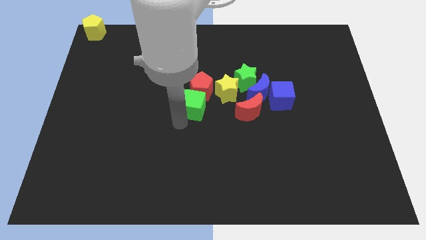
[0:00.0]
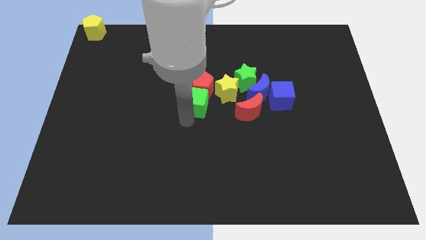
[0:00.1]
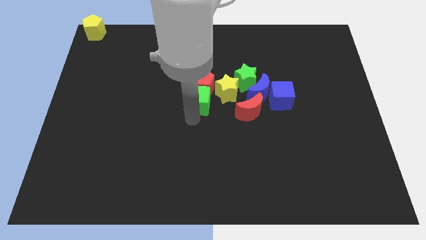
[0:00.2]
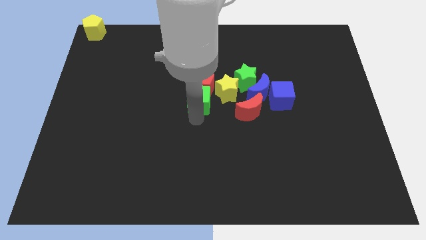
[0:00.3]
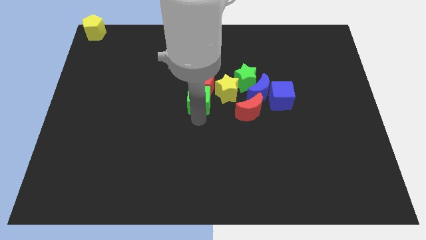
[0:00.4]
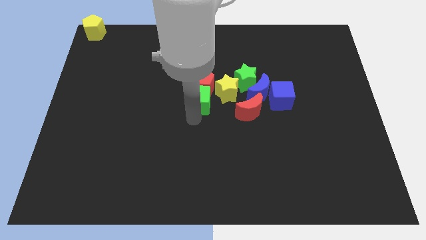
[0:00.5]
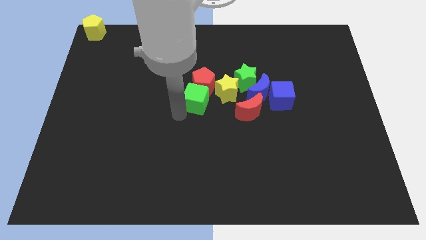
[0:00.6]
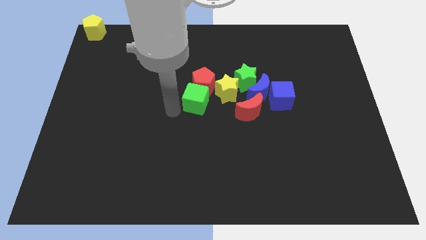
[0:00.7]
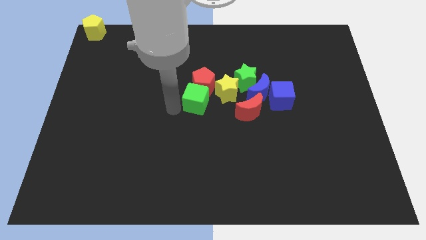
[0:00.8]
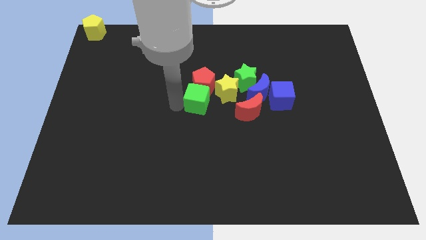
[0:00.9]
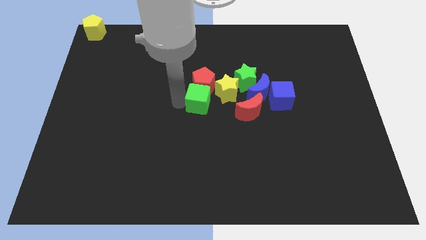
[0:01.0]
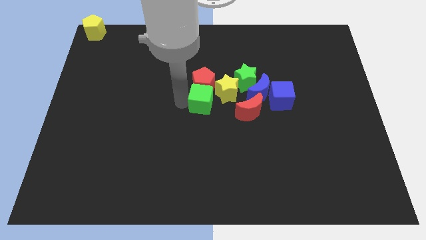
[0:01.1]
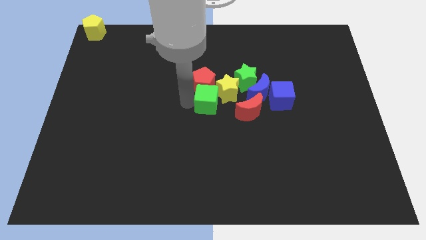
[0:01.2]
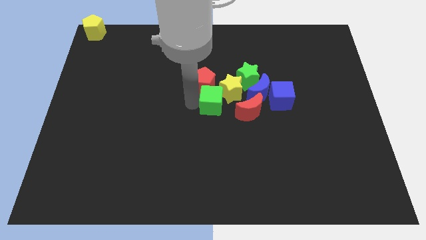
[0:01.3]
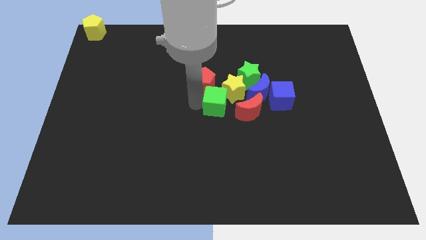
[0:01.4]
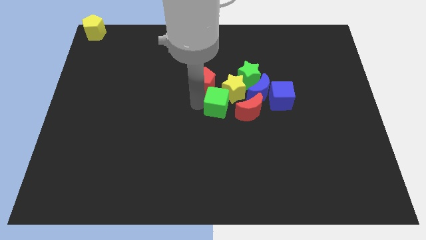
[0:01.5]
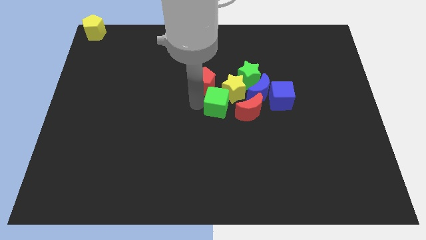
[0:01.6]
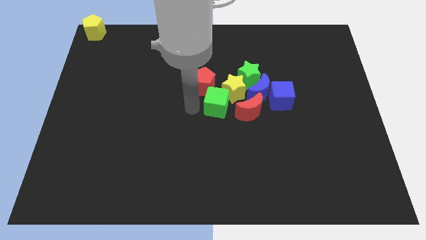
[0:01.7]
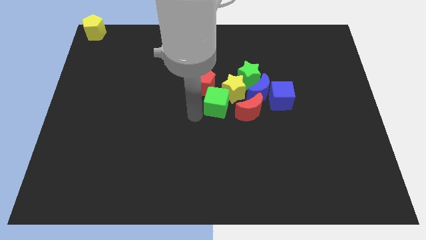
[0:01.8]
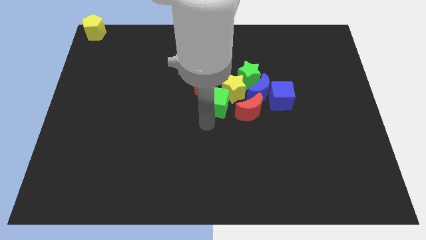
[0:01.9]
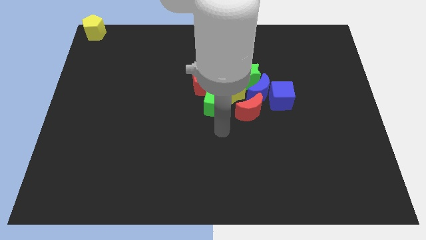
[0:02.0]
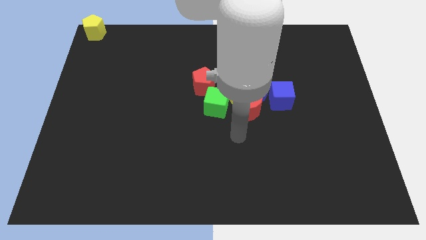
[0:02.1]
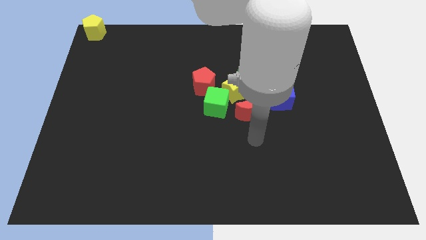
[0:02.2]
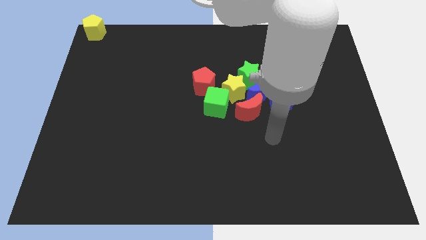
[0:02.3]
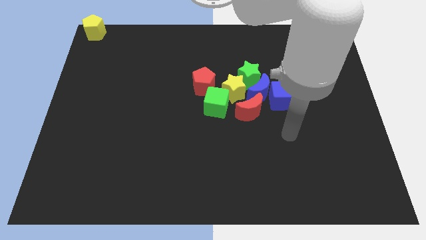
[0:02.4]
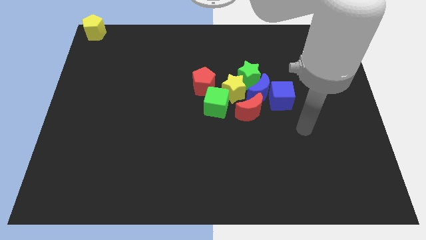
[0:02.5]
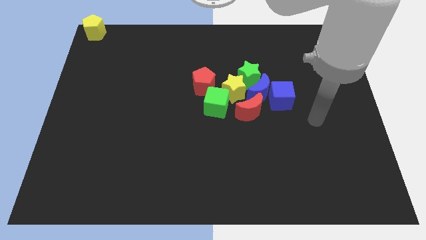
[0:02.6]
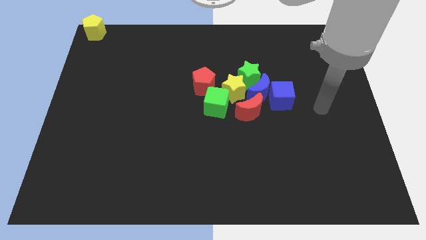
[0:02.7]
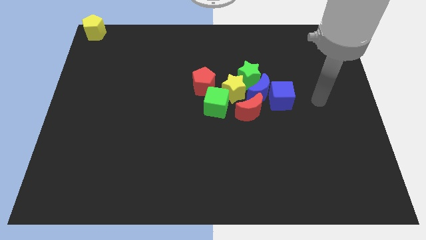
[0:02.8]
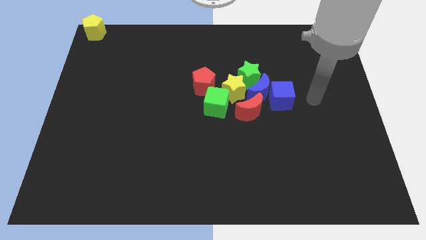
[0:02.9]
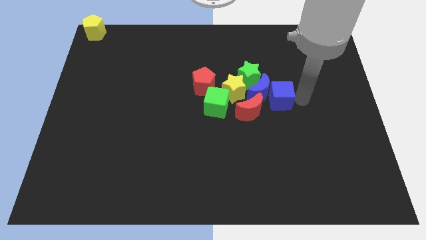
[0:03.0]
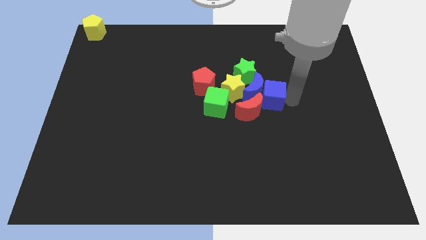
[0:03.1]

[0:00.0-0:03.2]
move arm to the right of the blue cube

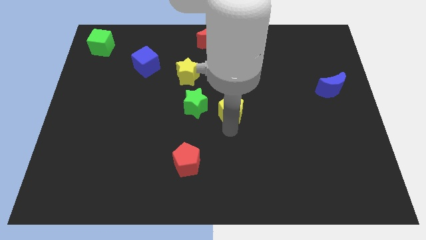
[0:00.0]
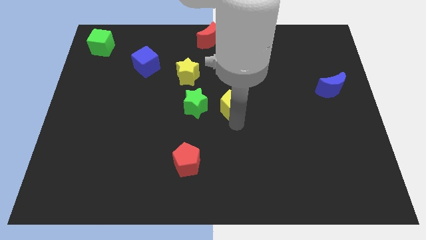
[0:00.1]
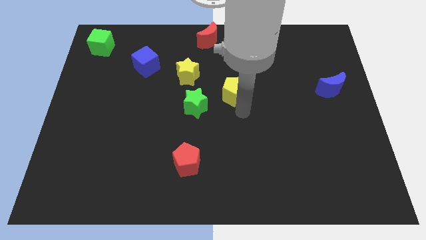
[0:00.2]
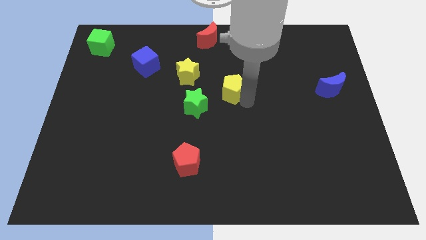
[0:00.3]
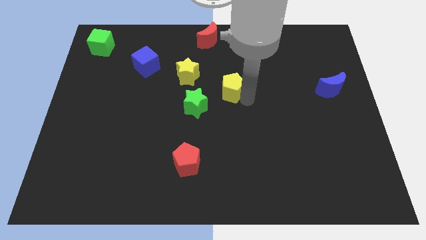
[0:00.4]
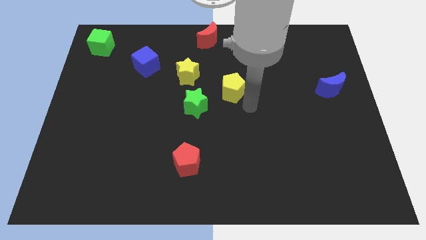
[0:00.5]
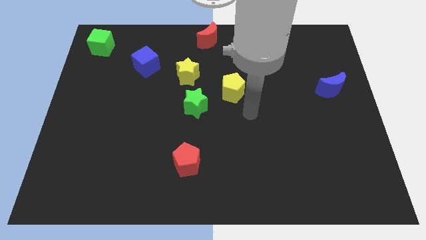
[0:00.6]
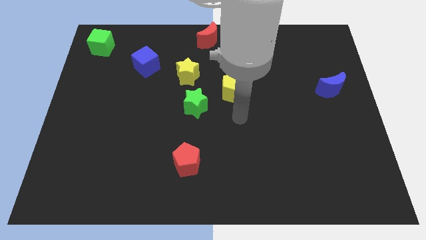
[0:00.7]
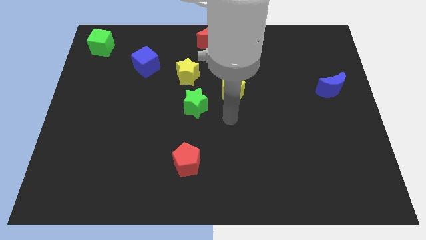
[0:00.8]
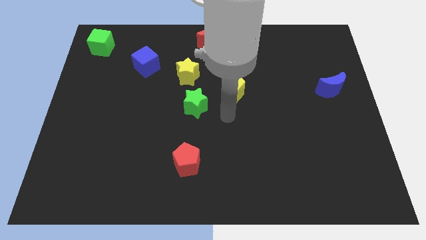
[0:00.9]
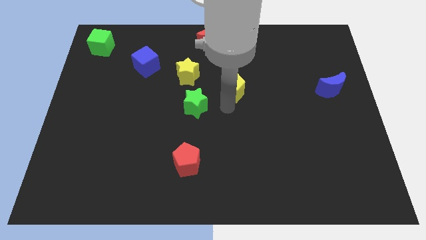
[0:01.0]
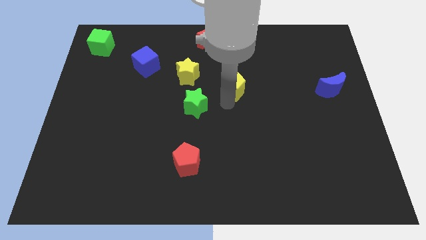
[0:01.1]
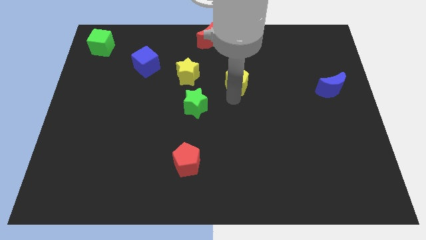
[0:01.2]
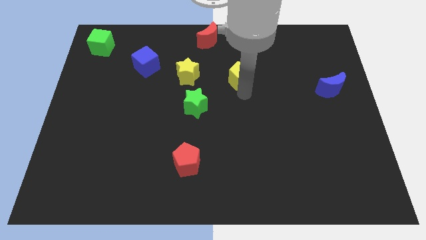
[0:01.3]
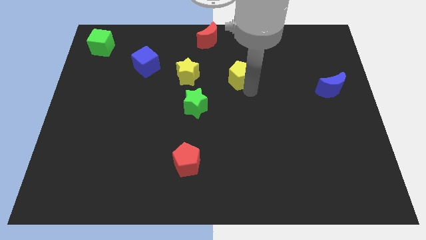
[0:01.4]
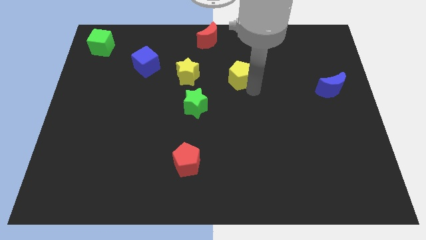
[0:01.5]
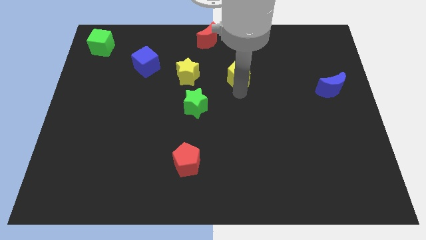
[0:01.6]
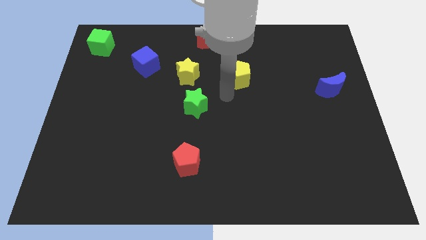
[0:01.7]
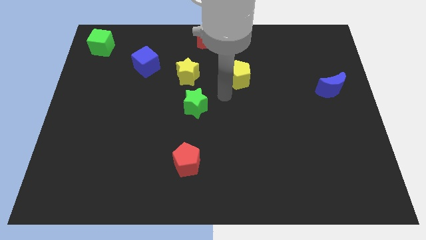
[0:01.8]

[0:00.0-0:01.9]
move the yellow pentagon to the right of the yellow star

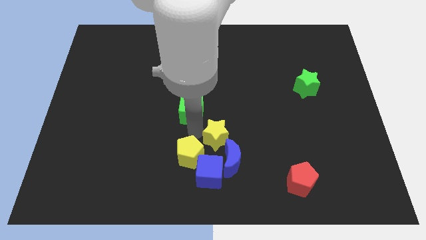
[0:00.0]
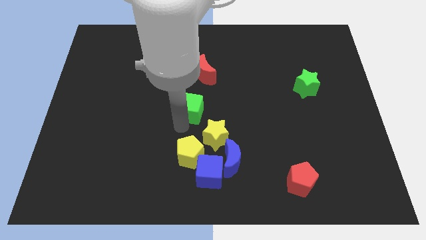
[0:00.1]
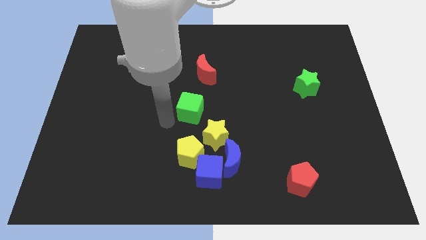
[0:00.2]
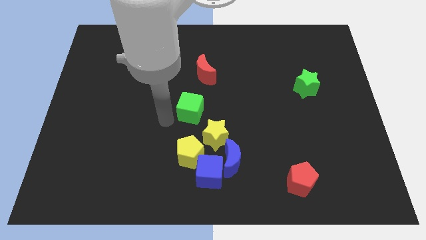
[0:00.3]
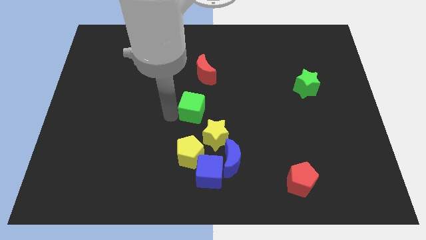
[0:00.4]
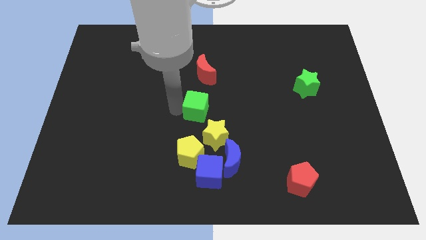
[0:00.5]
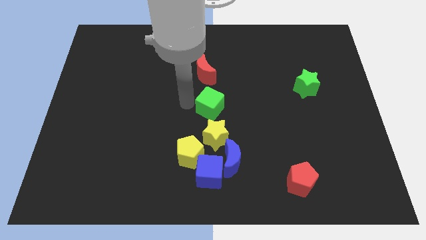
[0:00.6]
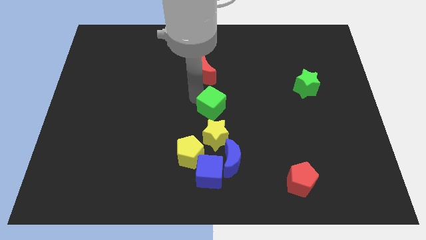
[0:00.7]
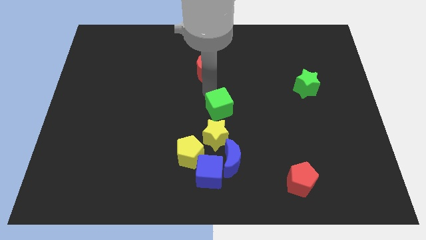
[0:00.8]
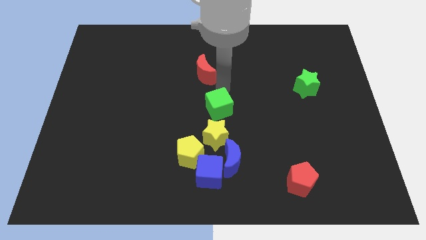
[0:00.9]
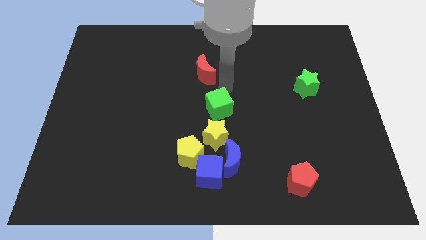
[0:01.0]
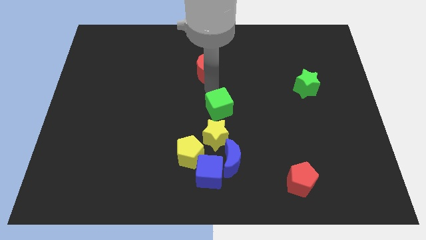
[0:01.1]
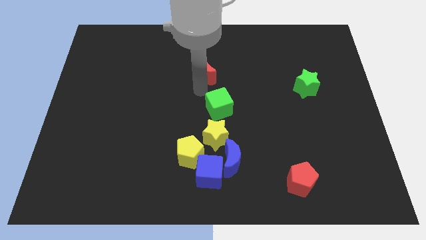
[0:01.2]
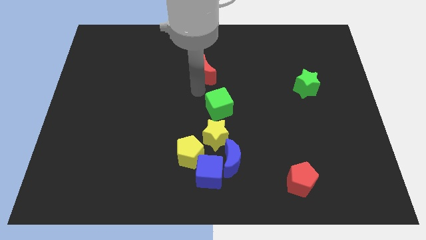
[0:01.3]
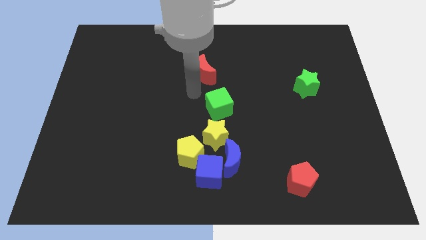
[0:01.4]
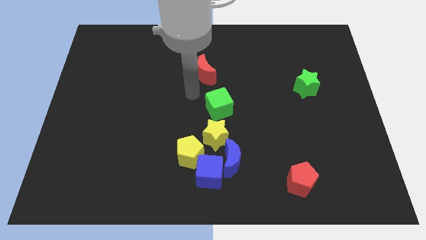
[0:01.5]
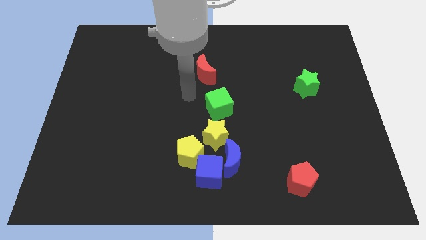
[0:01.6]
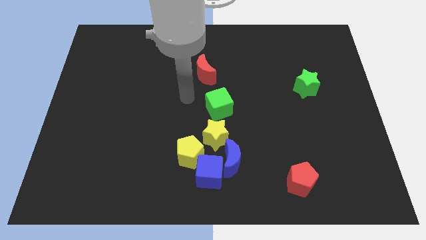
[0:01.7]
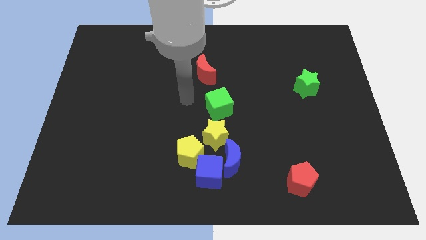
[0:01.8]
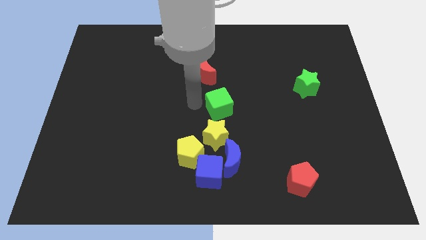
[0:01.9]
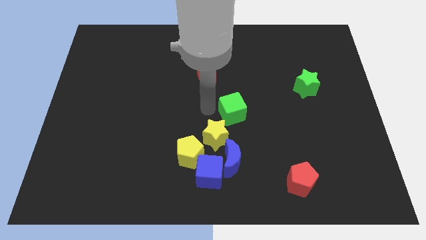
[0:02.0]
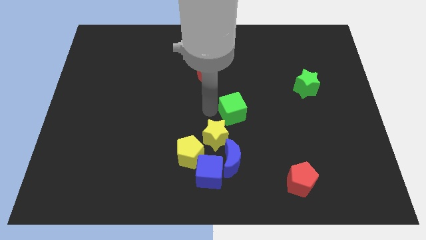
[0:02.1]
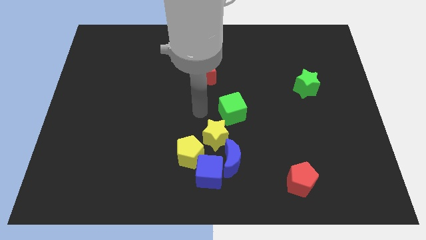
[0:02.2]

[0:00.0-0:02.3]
place the green cube diagonal to the yellow star

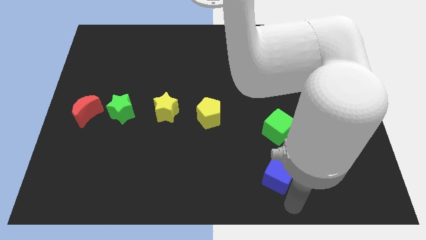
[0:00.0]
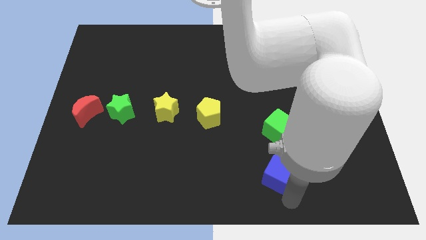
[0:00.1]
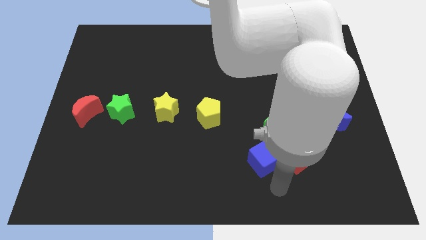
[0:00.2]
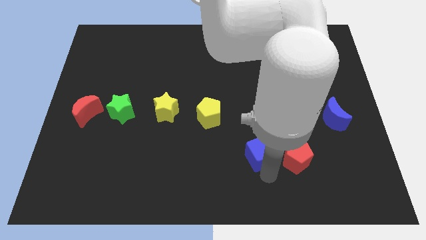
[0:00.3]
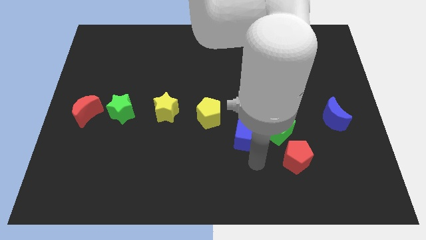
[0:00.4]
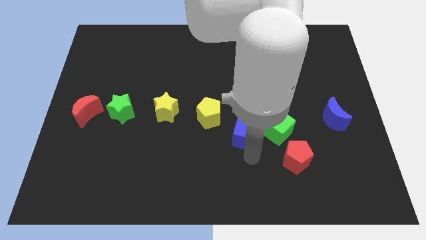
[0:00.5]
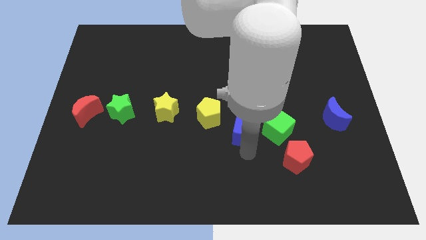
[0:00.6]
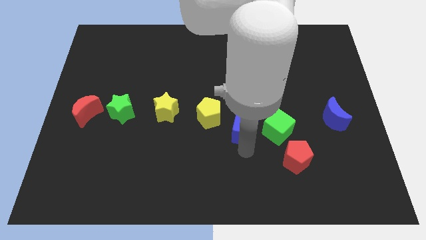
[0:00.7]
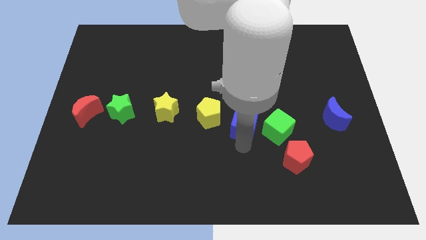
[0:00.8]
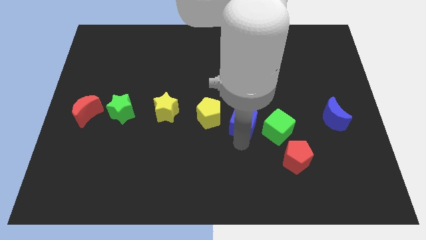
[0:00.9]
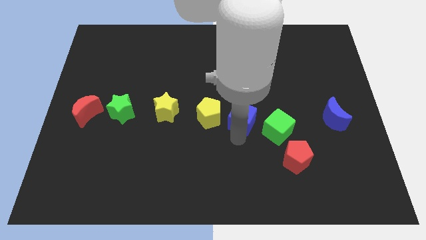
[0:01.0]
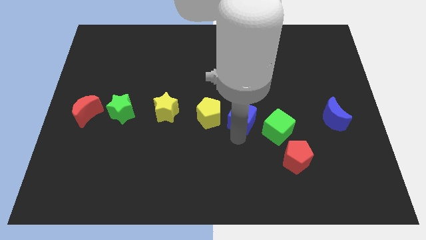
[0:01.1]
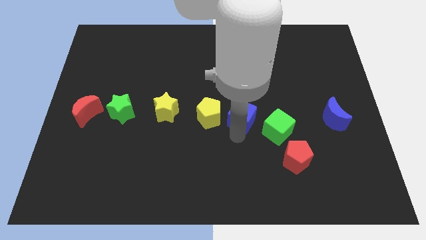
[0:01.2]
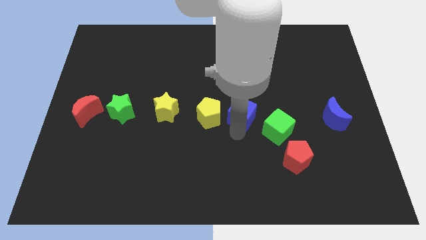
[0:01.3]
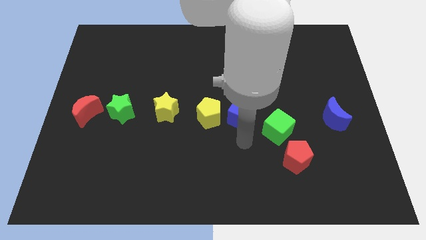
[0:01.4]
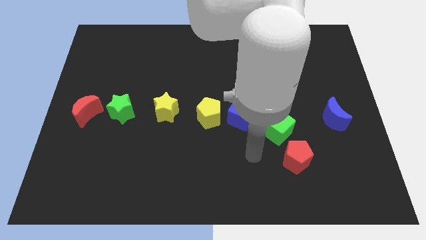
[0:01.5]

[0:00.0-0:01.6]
move the blue cube to teh left of the green cube
